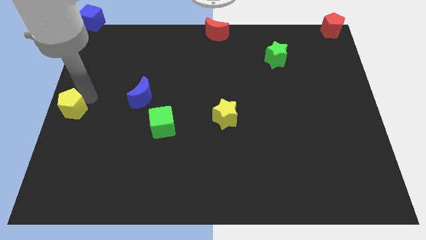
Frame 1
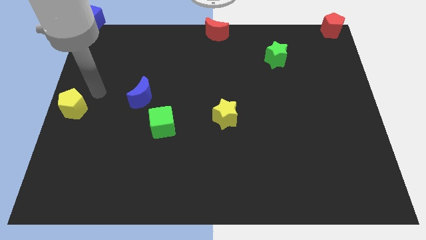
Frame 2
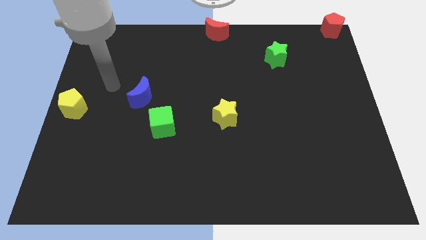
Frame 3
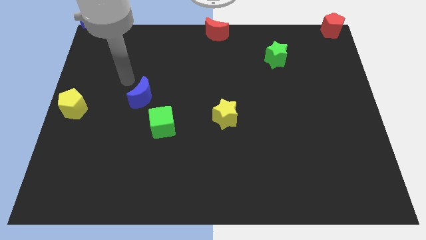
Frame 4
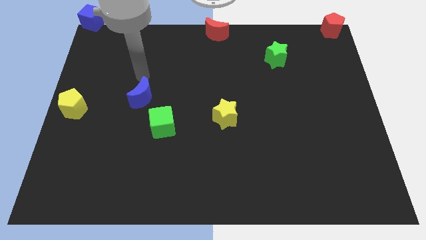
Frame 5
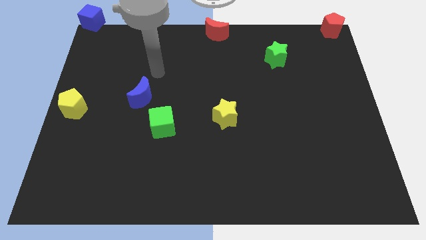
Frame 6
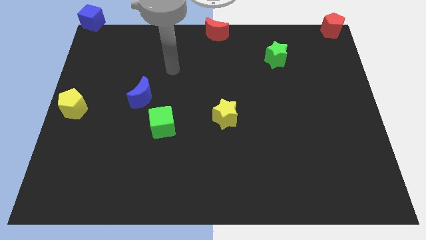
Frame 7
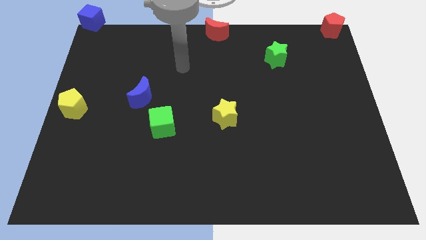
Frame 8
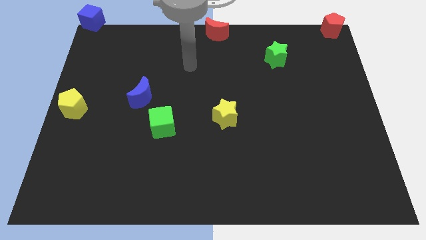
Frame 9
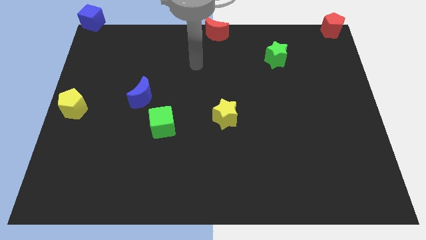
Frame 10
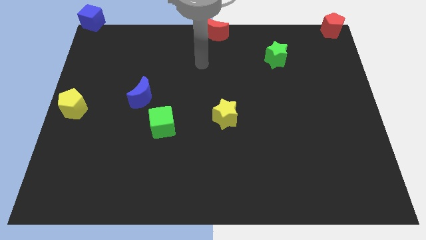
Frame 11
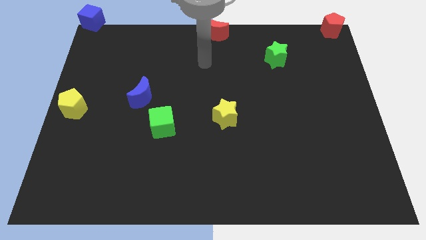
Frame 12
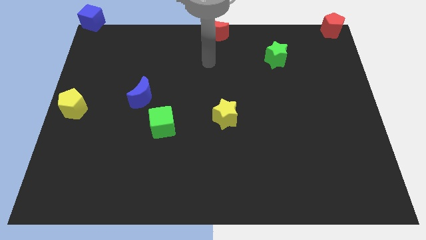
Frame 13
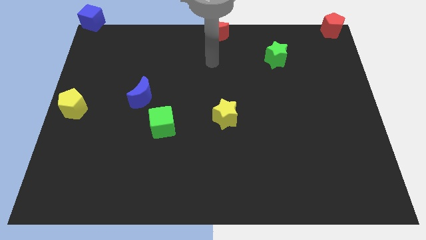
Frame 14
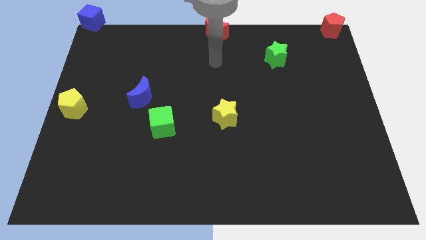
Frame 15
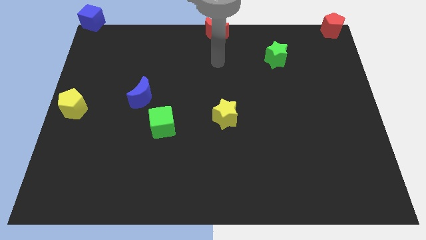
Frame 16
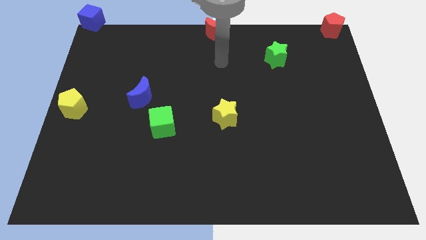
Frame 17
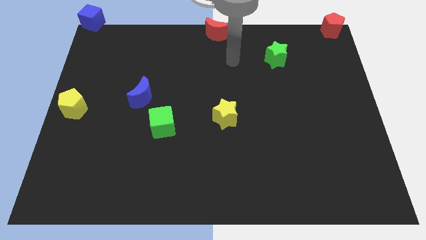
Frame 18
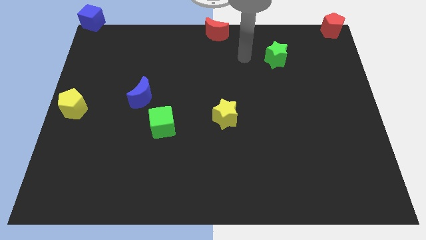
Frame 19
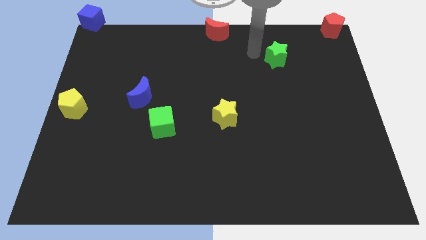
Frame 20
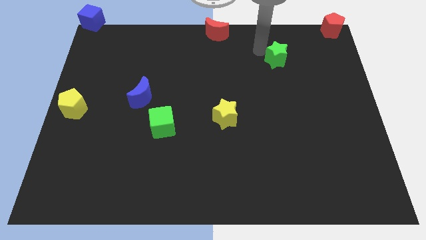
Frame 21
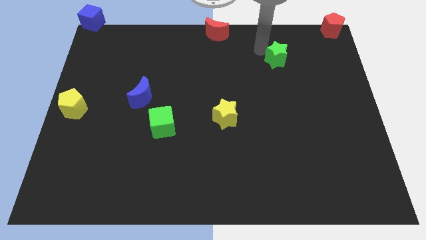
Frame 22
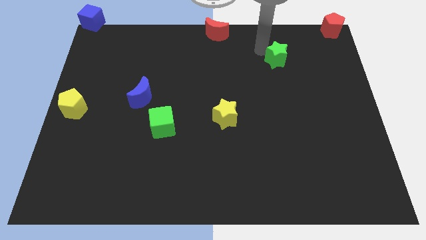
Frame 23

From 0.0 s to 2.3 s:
place your arm away from the yellow pentagon

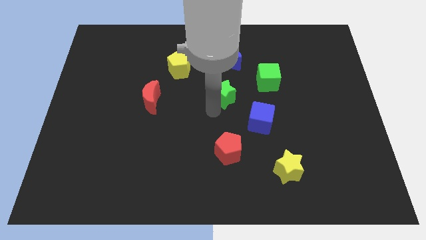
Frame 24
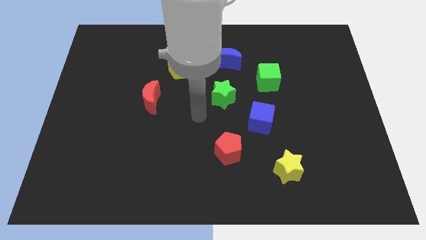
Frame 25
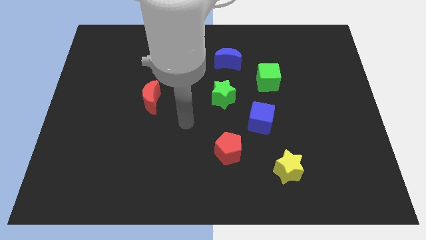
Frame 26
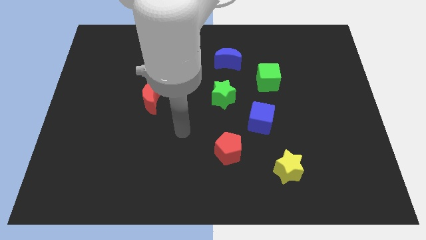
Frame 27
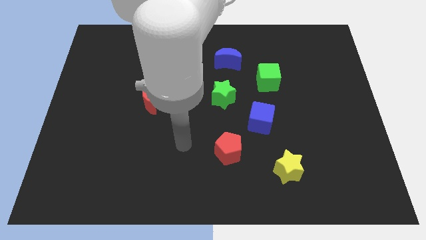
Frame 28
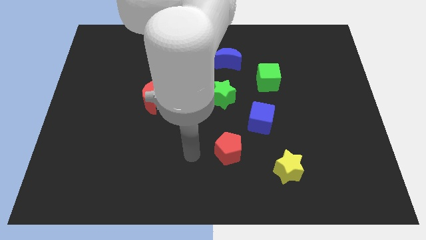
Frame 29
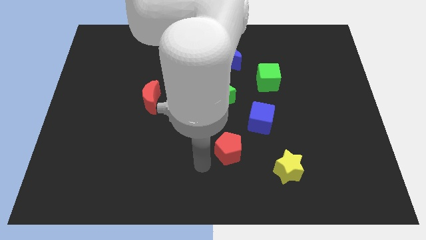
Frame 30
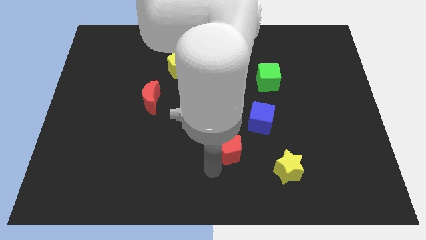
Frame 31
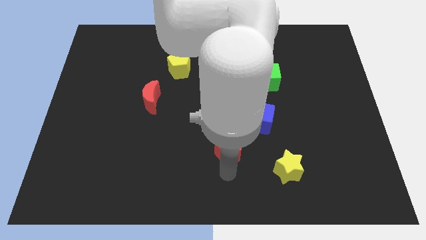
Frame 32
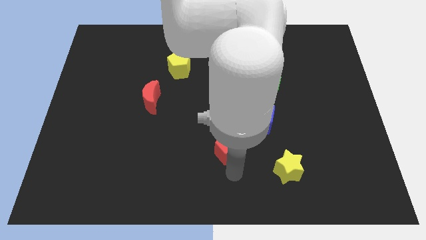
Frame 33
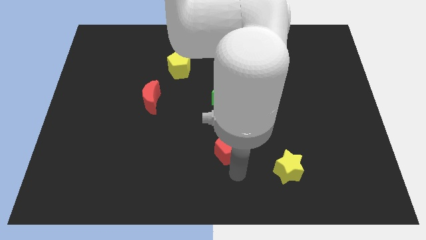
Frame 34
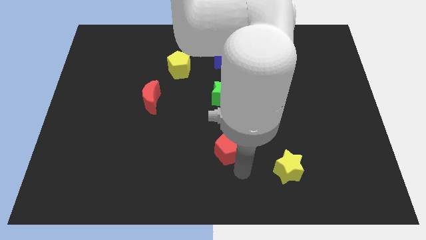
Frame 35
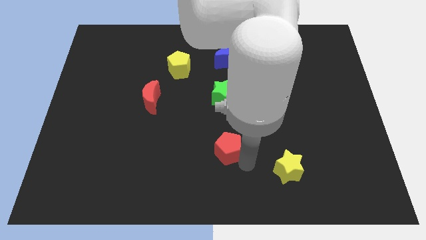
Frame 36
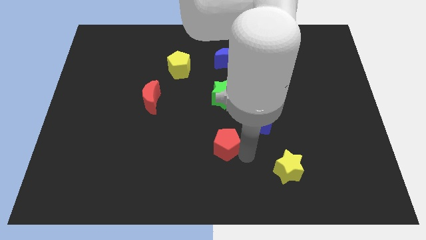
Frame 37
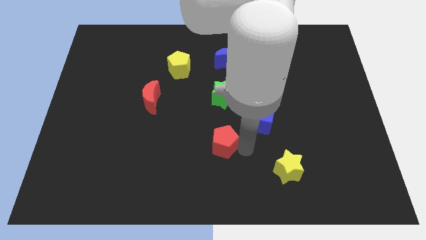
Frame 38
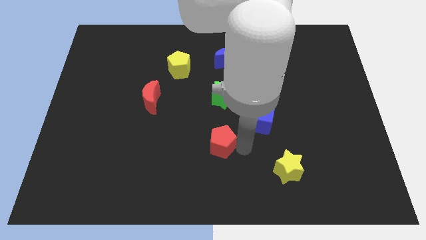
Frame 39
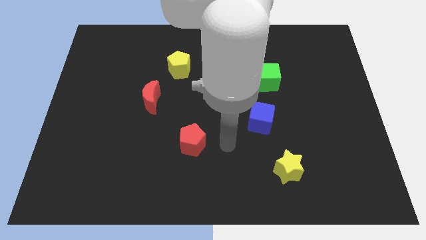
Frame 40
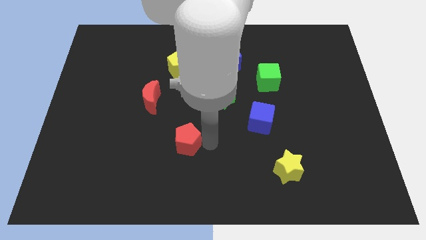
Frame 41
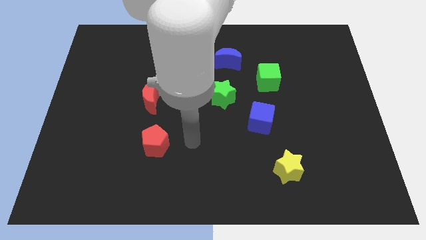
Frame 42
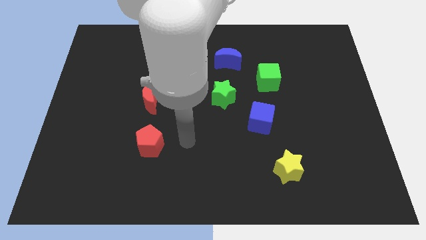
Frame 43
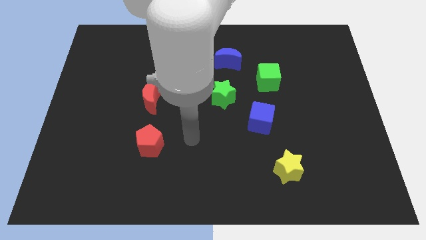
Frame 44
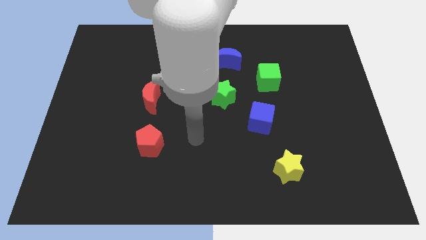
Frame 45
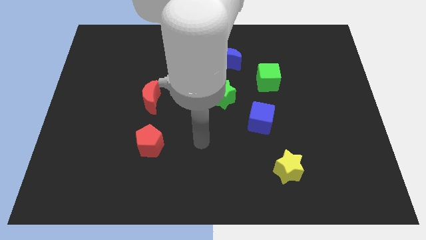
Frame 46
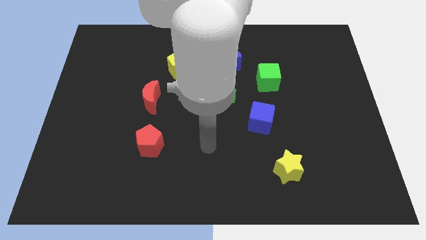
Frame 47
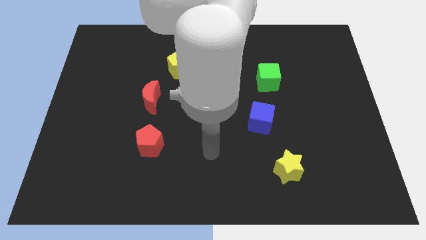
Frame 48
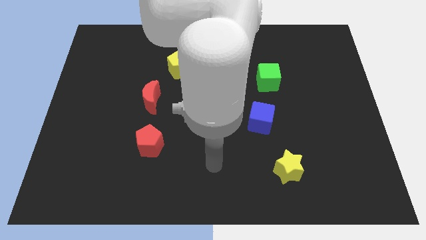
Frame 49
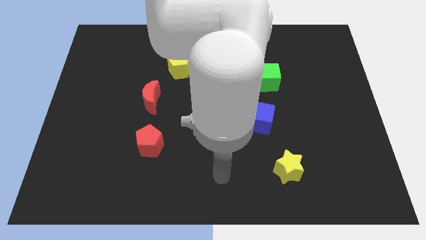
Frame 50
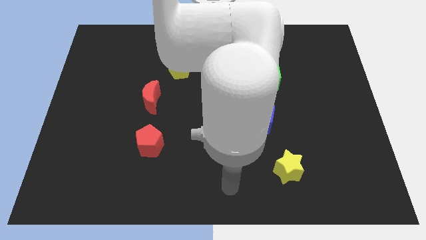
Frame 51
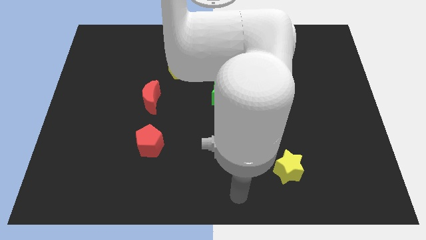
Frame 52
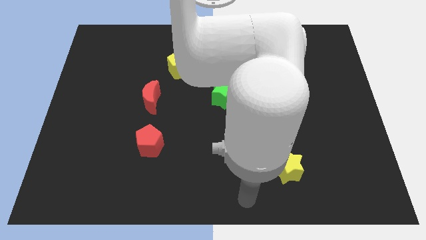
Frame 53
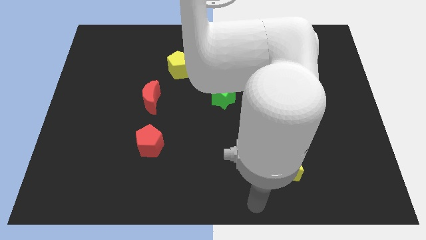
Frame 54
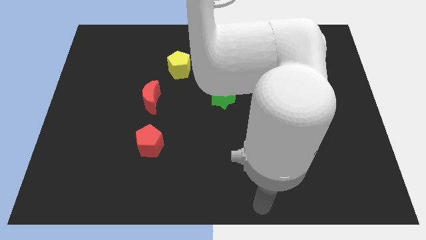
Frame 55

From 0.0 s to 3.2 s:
put the red pentagon vertically below the red moon

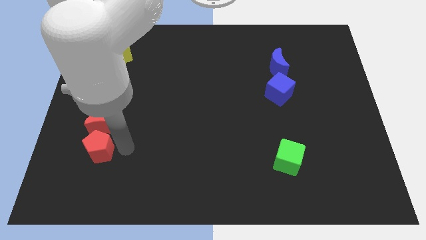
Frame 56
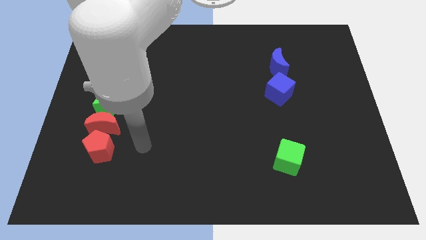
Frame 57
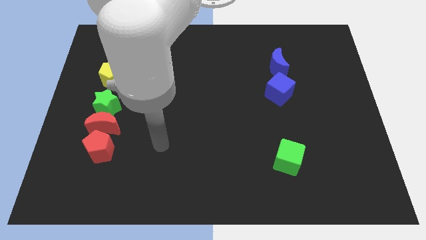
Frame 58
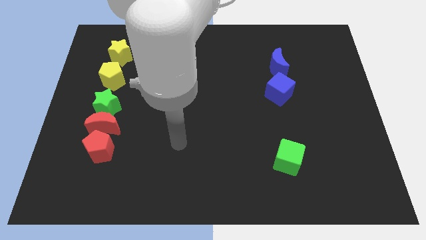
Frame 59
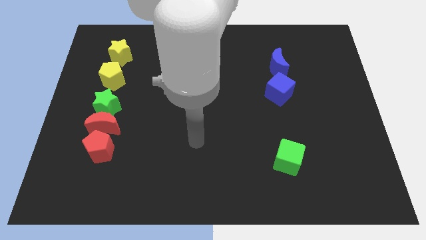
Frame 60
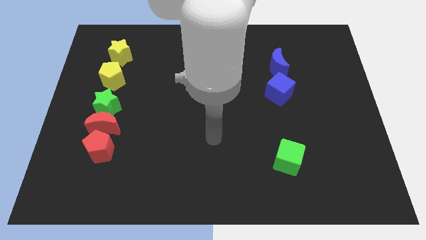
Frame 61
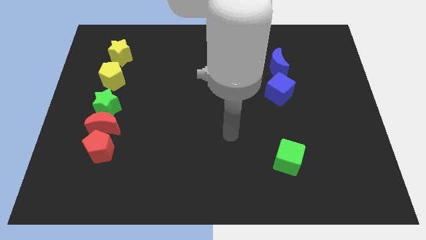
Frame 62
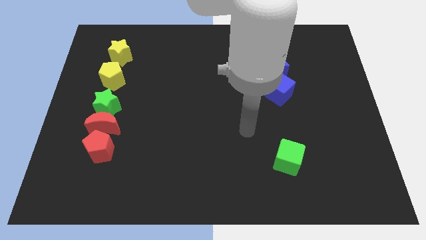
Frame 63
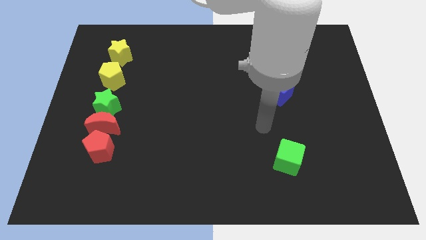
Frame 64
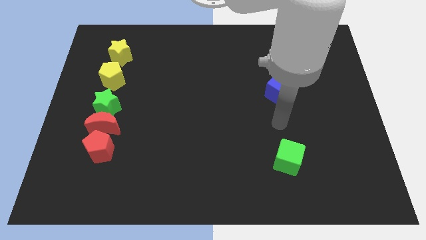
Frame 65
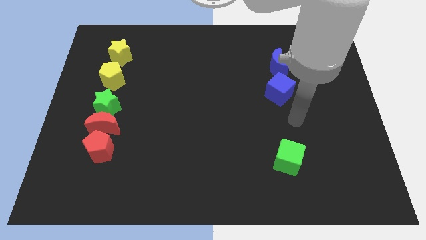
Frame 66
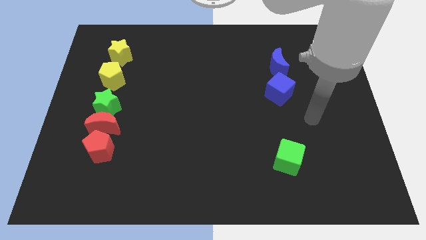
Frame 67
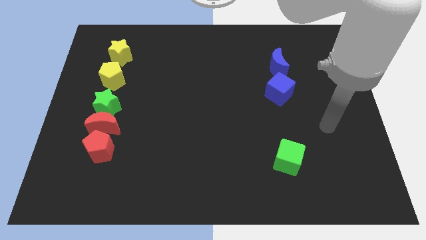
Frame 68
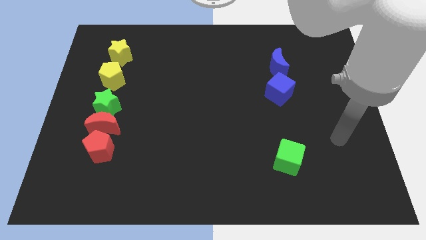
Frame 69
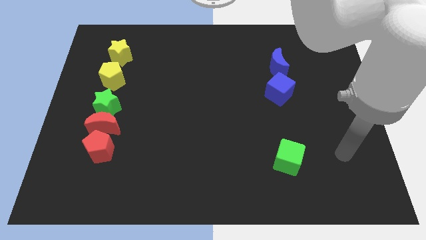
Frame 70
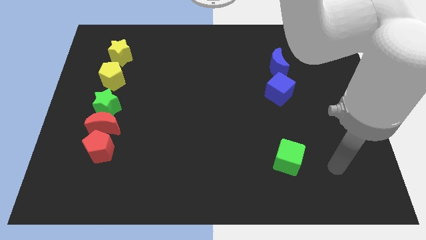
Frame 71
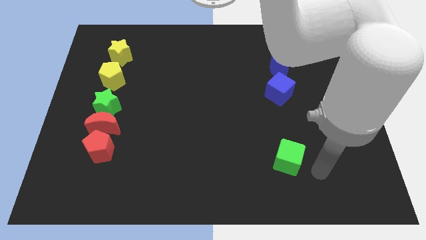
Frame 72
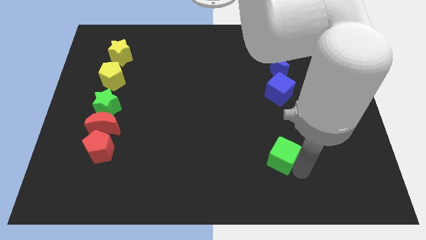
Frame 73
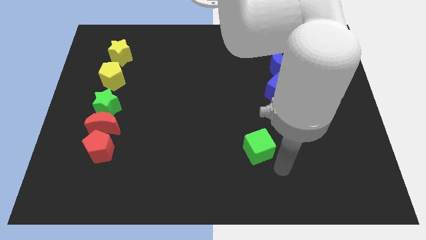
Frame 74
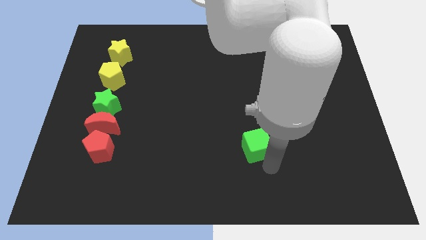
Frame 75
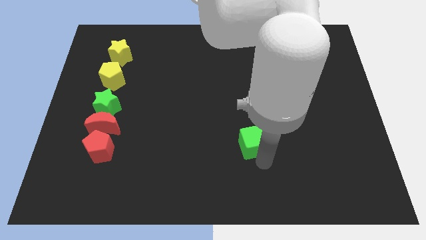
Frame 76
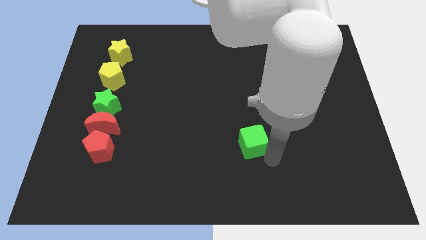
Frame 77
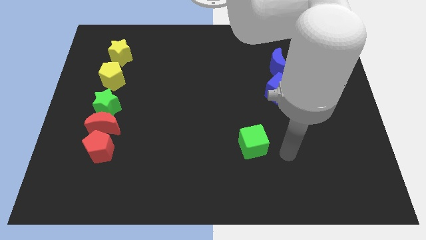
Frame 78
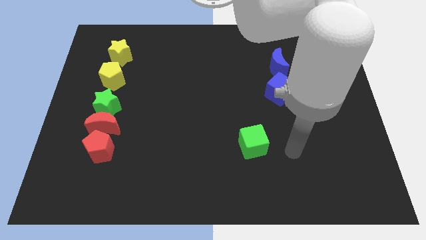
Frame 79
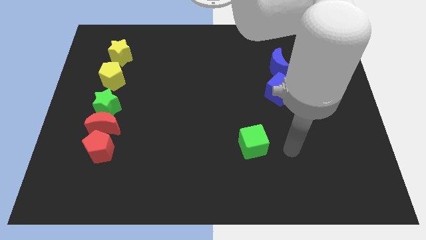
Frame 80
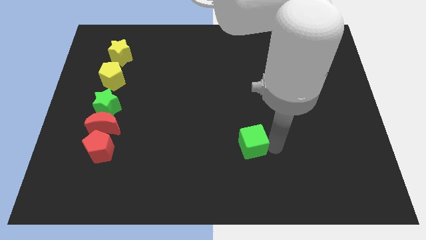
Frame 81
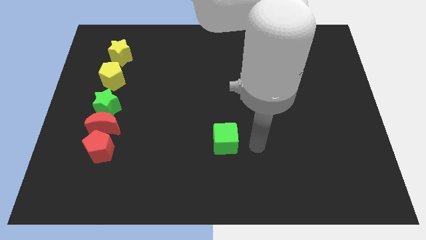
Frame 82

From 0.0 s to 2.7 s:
move your arm away from the red pentagon

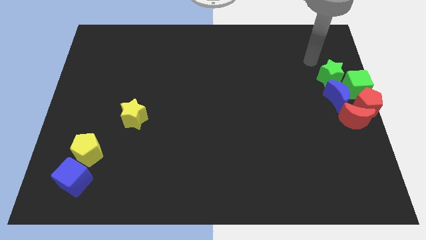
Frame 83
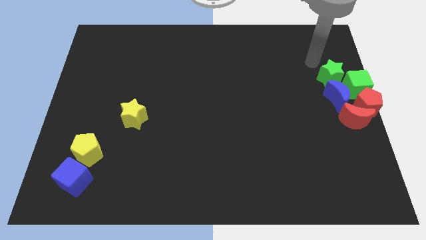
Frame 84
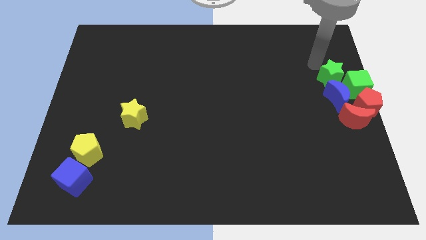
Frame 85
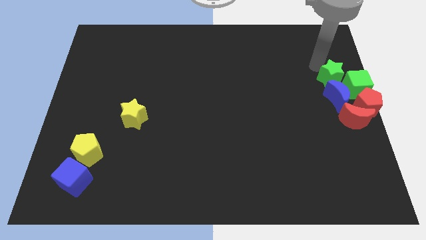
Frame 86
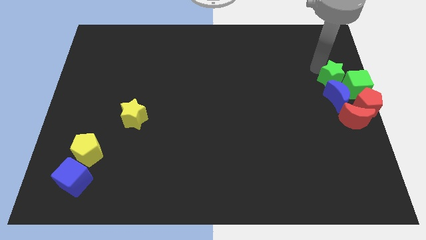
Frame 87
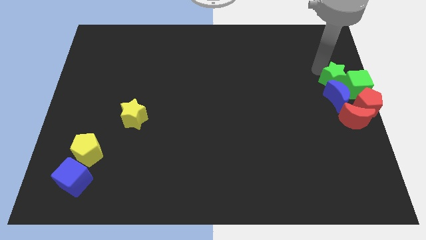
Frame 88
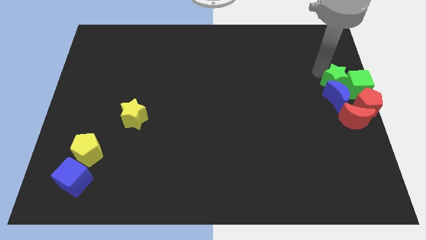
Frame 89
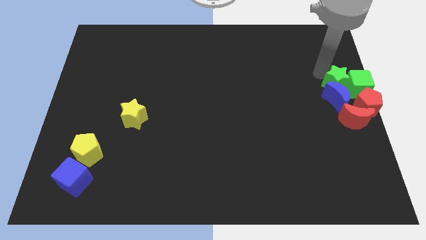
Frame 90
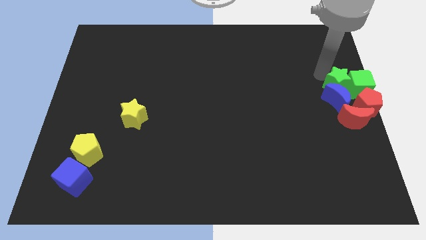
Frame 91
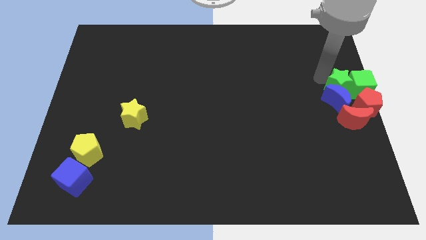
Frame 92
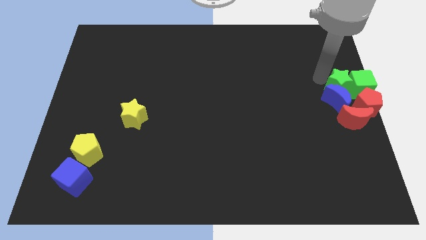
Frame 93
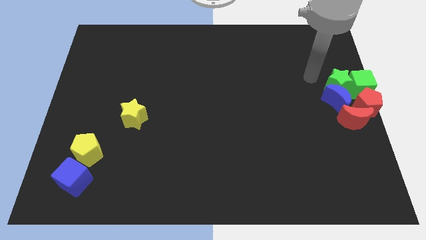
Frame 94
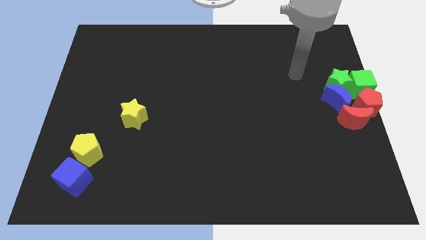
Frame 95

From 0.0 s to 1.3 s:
push the green star into the blue moon
